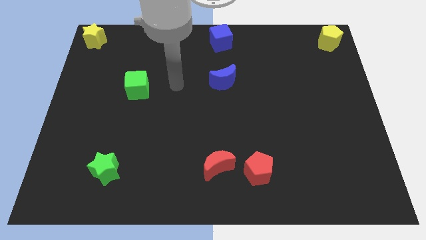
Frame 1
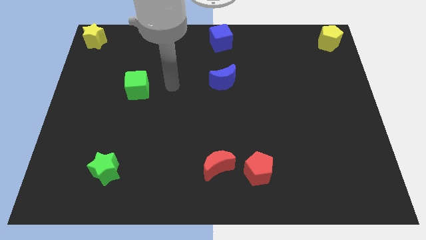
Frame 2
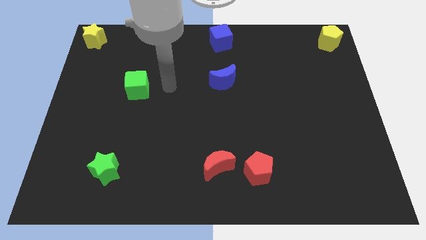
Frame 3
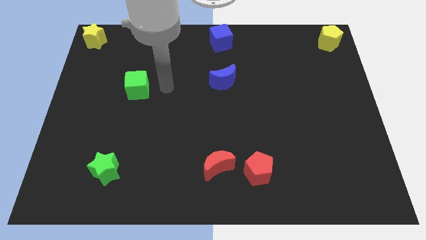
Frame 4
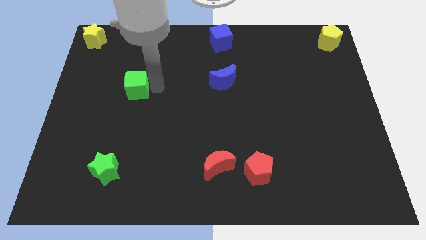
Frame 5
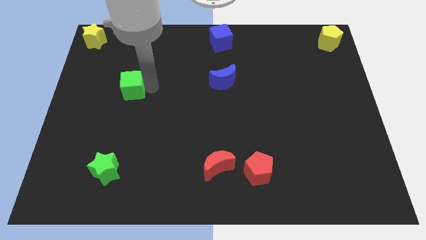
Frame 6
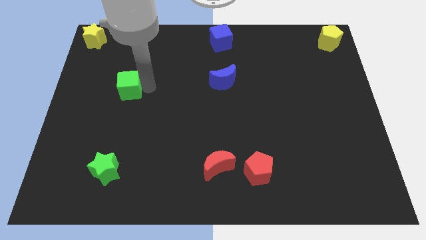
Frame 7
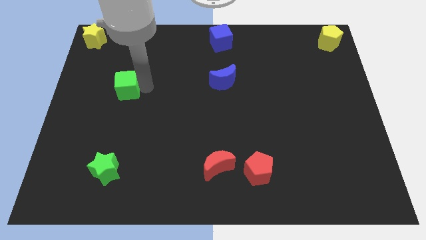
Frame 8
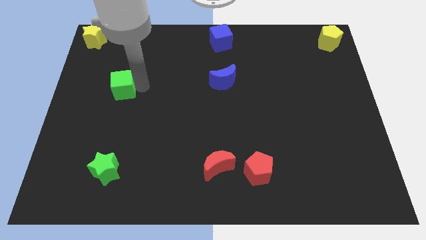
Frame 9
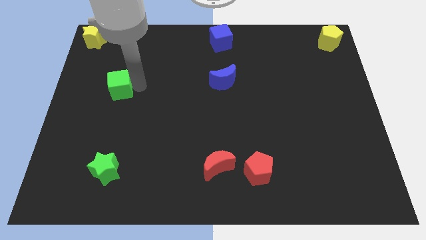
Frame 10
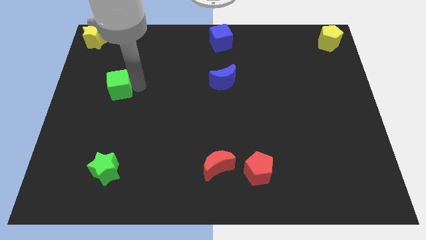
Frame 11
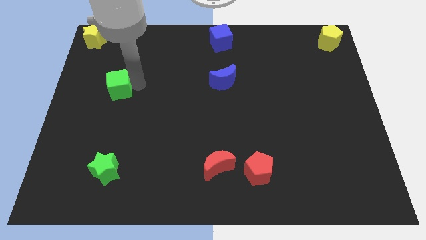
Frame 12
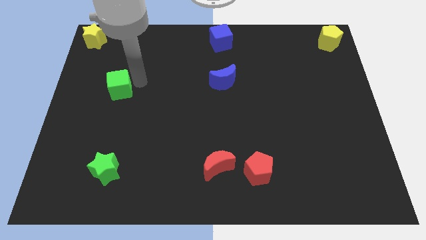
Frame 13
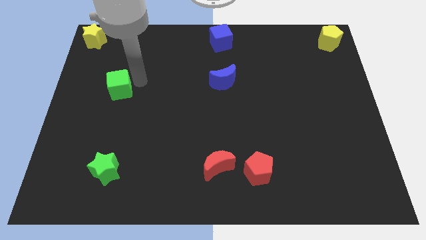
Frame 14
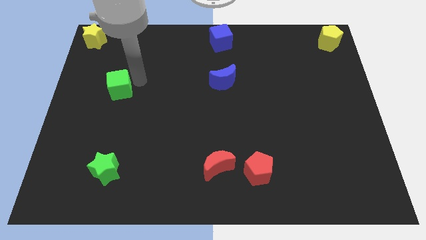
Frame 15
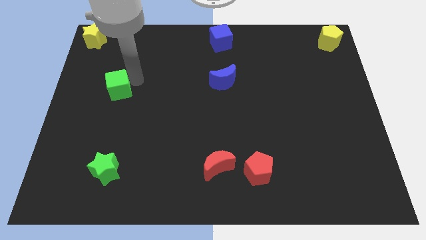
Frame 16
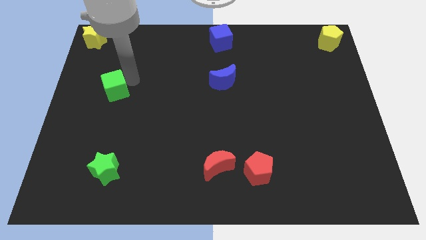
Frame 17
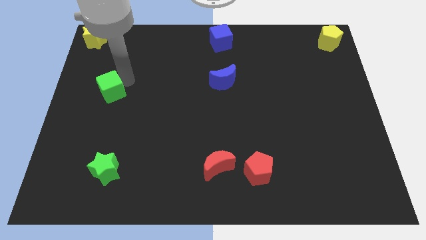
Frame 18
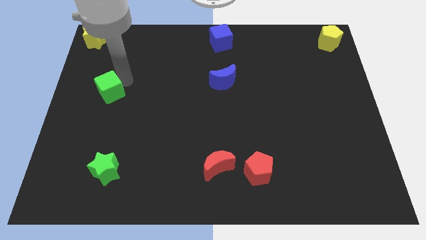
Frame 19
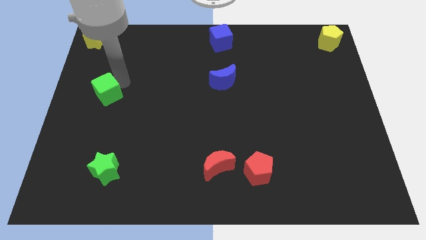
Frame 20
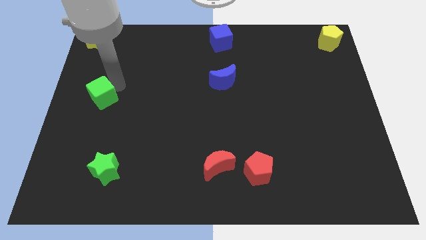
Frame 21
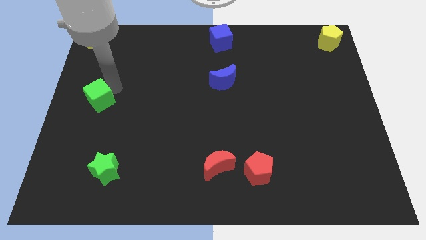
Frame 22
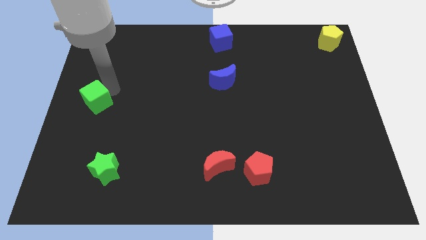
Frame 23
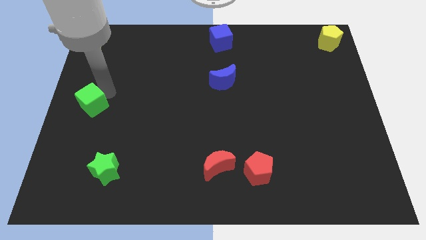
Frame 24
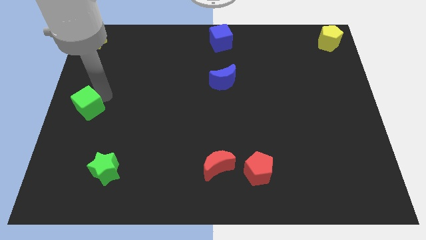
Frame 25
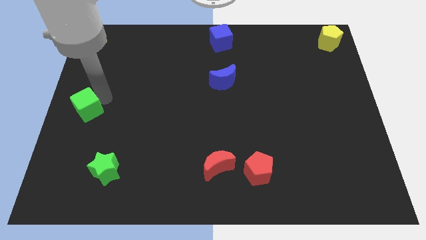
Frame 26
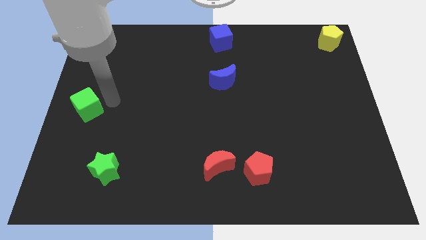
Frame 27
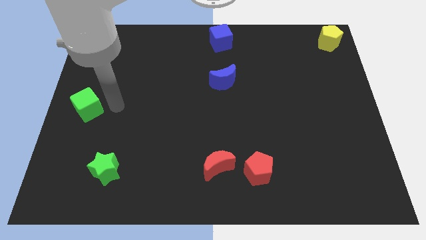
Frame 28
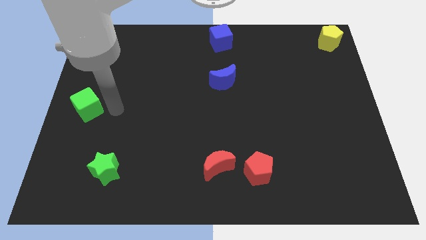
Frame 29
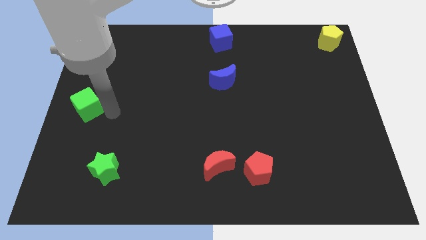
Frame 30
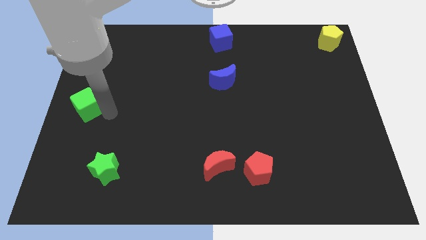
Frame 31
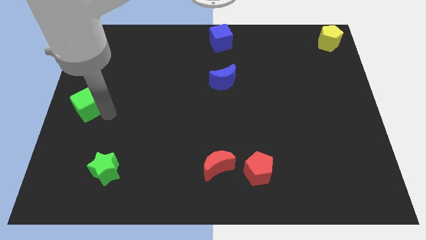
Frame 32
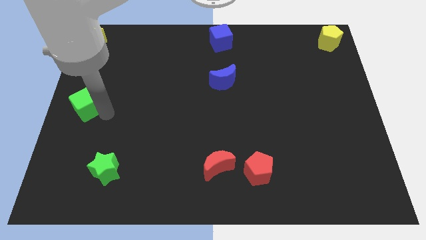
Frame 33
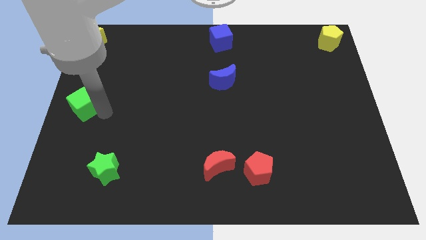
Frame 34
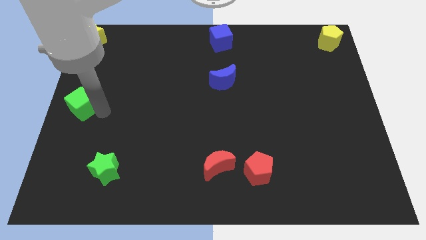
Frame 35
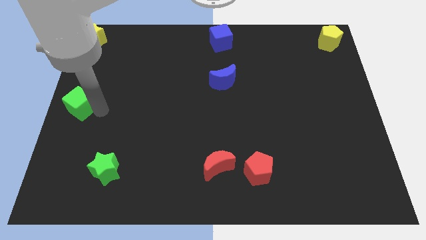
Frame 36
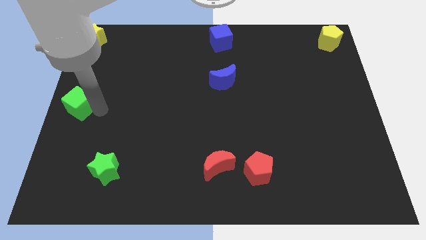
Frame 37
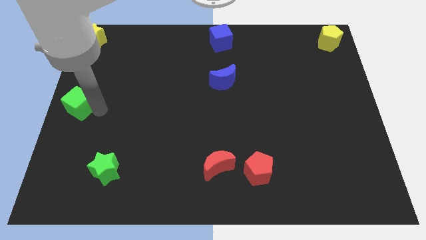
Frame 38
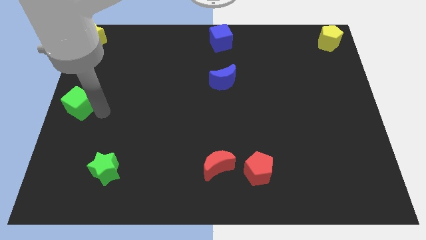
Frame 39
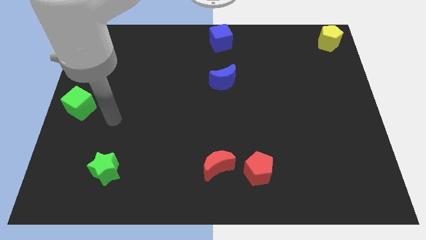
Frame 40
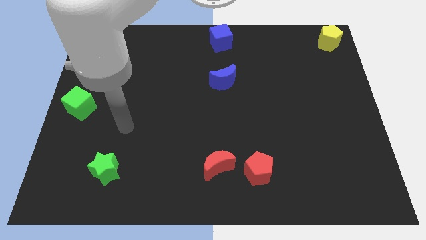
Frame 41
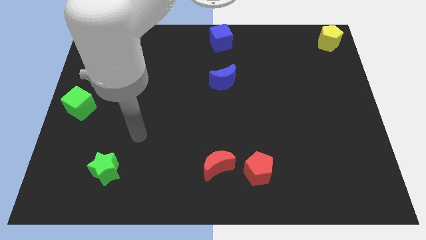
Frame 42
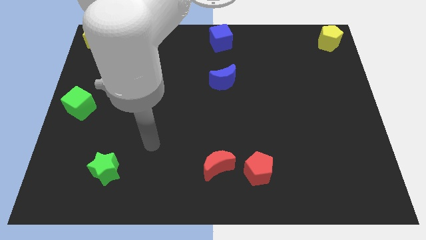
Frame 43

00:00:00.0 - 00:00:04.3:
move green cube to the left center of the board

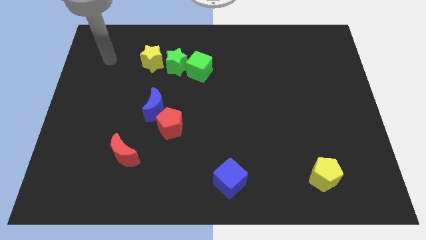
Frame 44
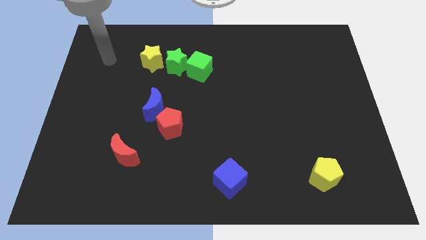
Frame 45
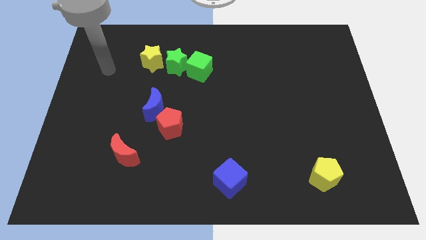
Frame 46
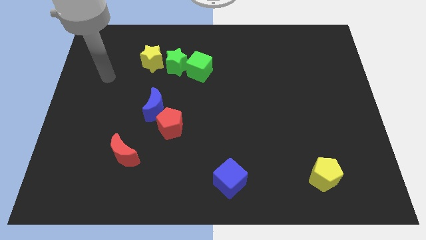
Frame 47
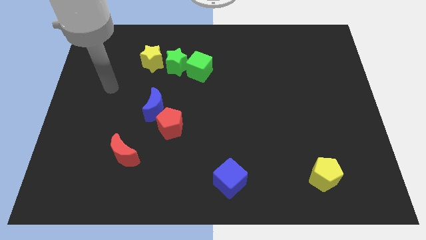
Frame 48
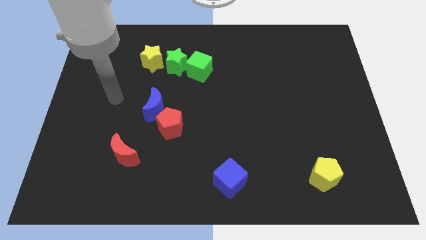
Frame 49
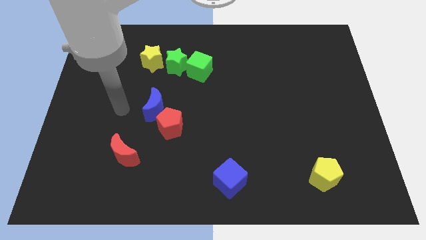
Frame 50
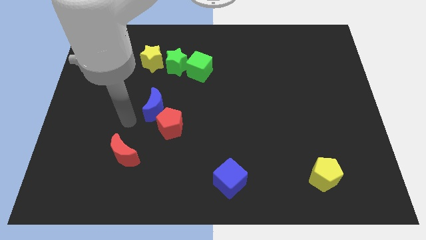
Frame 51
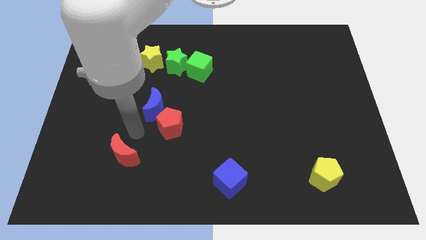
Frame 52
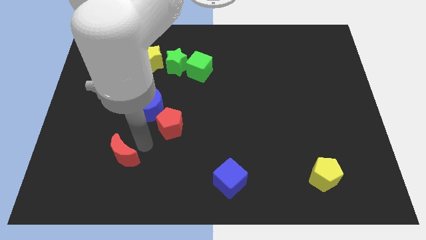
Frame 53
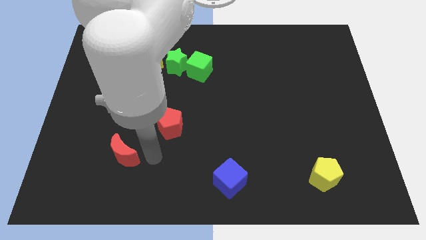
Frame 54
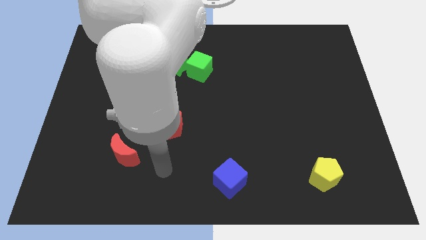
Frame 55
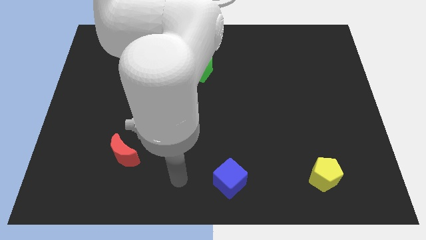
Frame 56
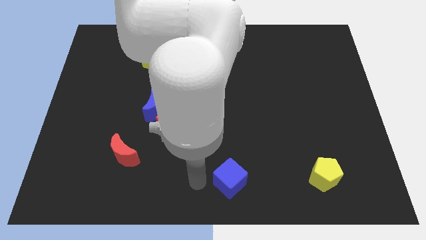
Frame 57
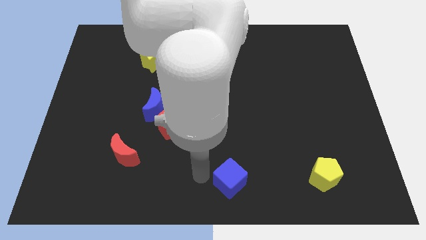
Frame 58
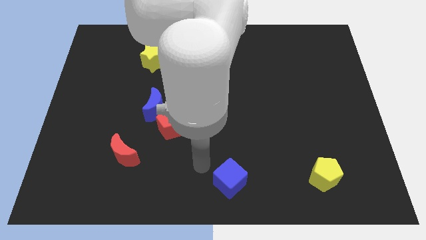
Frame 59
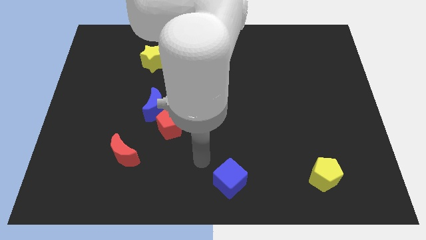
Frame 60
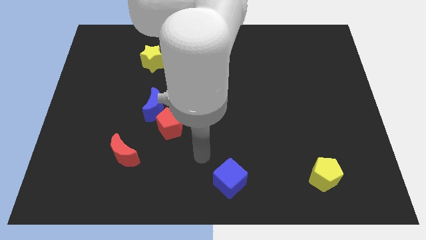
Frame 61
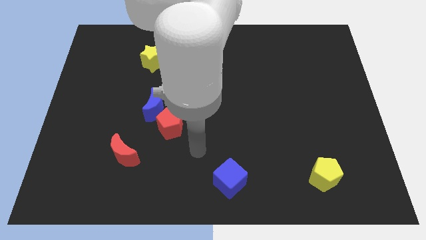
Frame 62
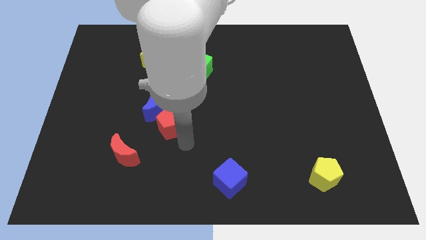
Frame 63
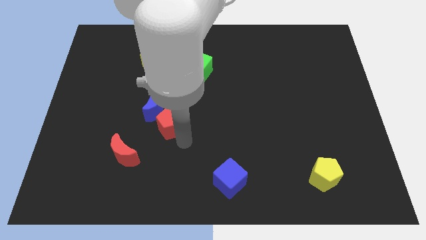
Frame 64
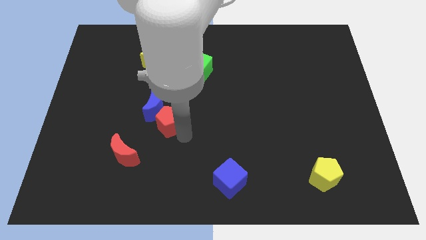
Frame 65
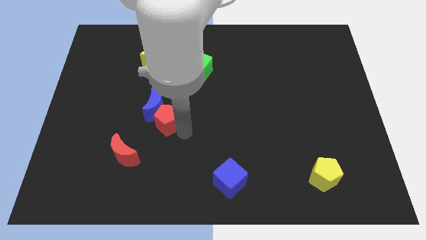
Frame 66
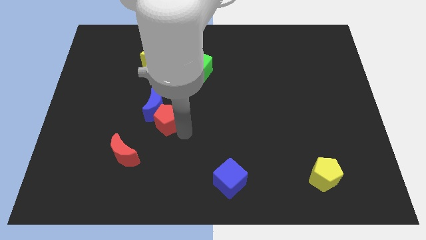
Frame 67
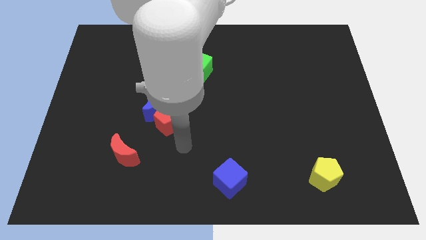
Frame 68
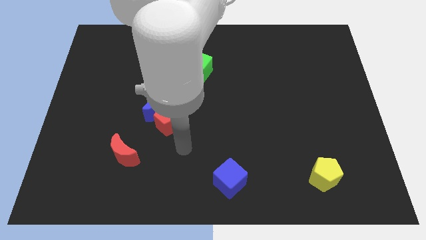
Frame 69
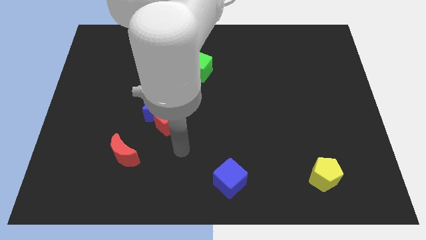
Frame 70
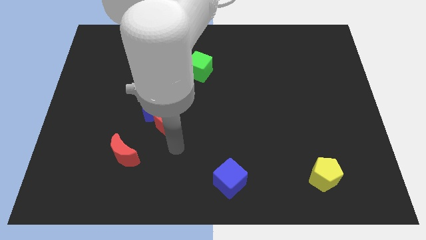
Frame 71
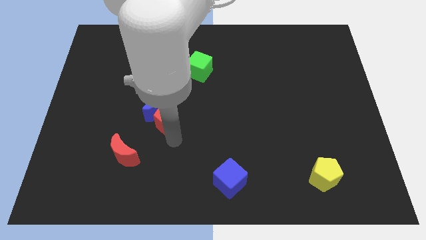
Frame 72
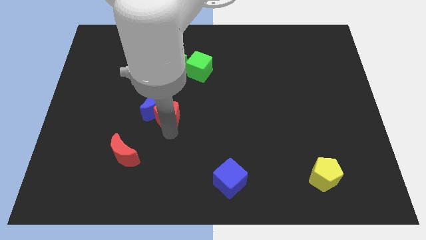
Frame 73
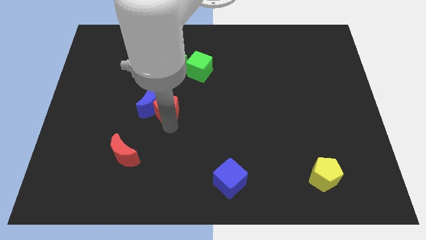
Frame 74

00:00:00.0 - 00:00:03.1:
move the red pentagon to the right side of the blue moon

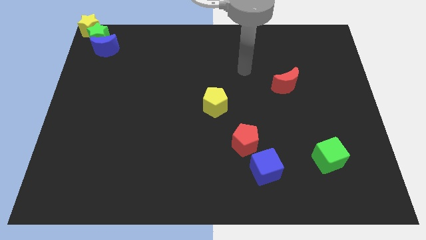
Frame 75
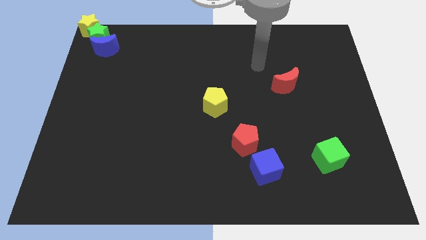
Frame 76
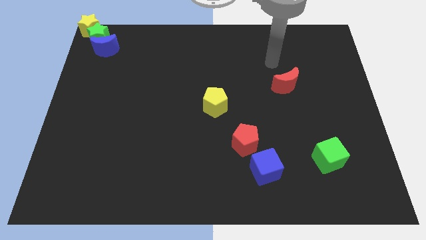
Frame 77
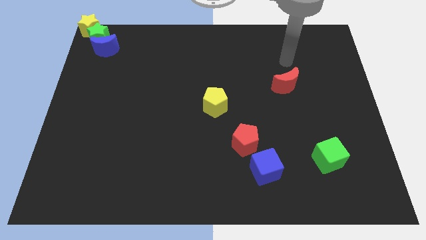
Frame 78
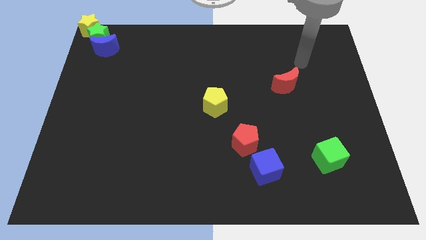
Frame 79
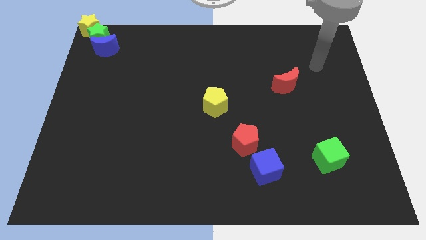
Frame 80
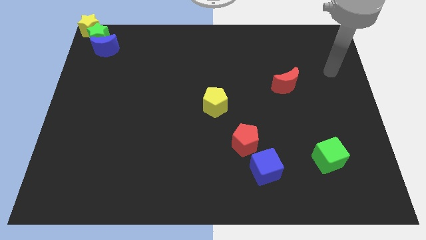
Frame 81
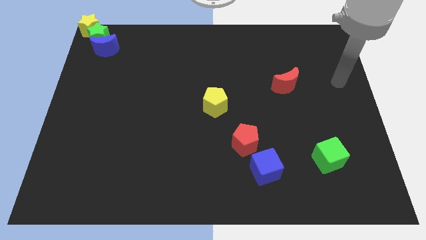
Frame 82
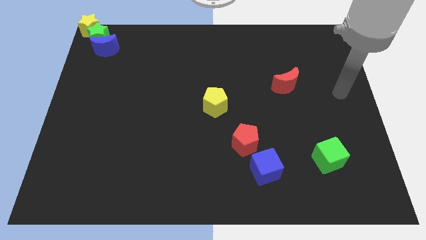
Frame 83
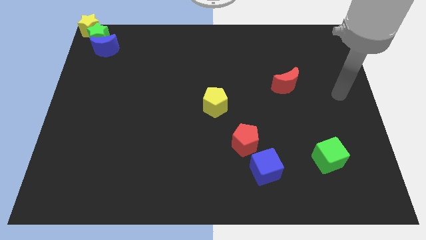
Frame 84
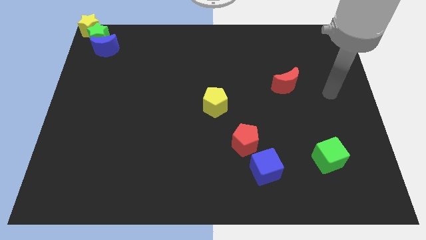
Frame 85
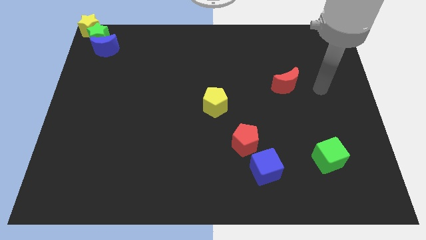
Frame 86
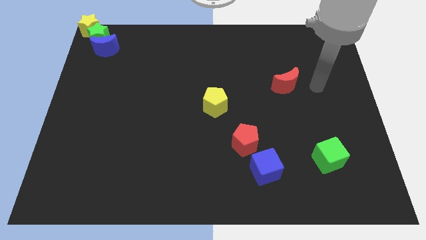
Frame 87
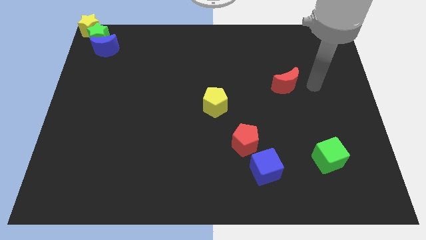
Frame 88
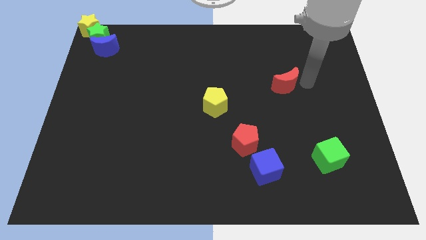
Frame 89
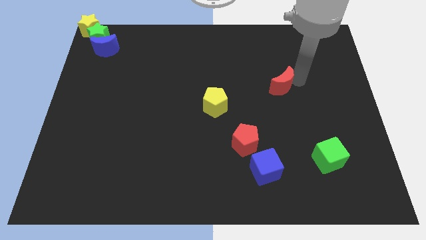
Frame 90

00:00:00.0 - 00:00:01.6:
tap the right side of the red moon
